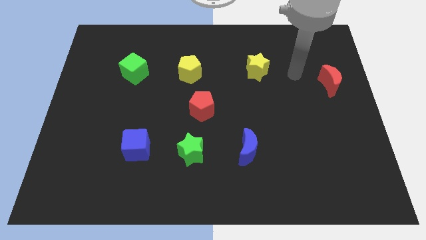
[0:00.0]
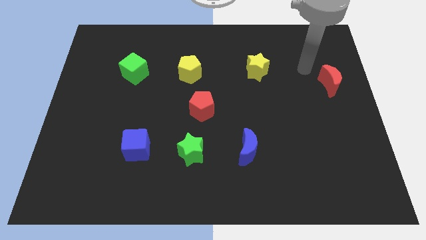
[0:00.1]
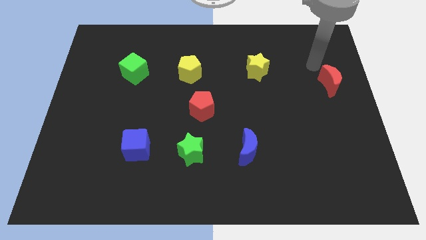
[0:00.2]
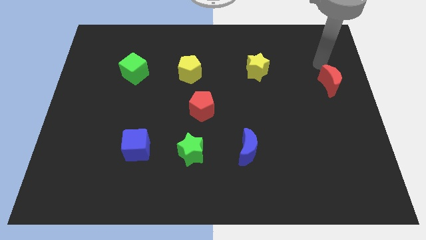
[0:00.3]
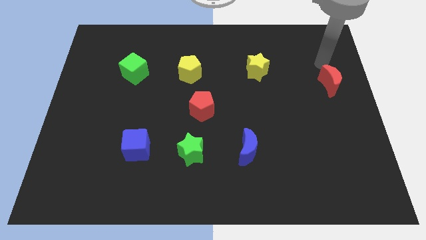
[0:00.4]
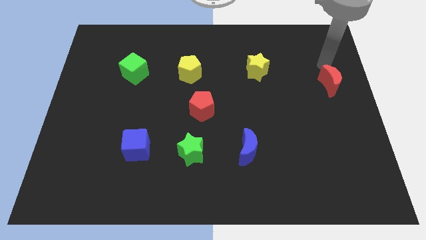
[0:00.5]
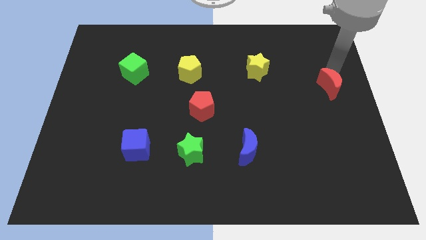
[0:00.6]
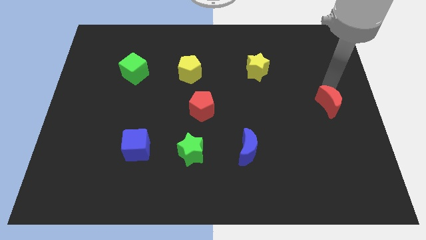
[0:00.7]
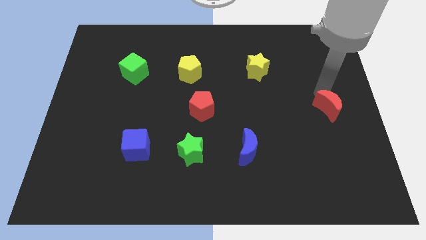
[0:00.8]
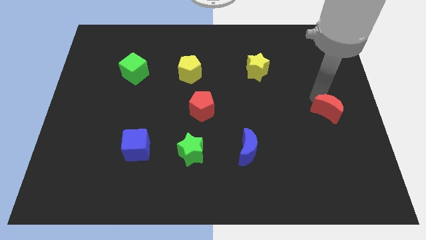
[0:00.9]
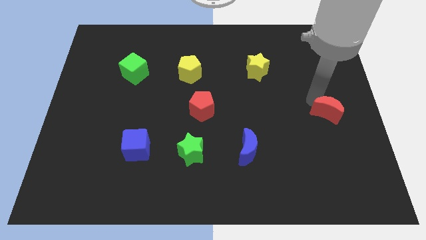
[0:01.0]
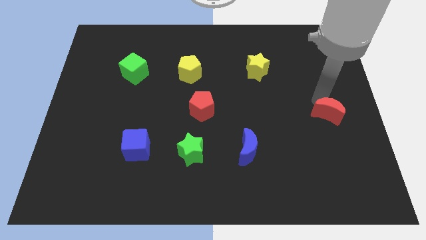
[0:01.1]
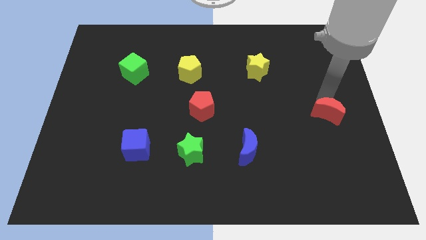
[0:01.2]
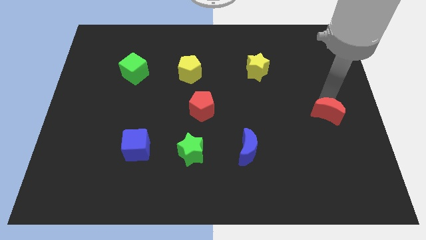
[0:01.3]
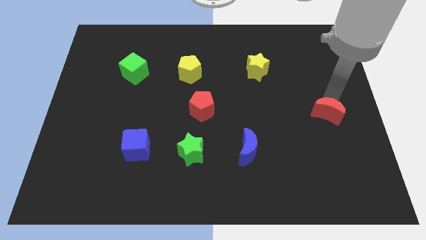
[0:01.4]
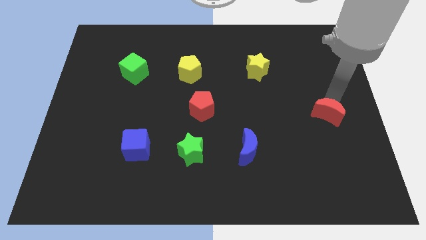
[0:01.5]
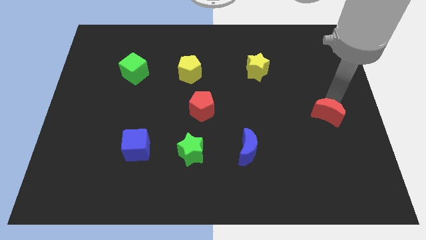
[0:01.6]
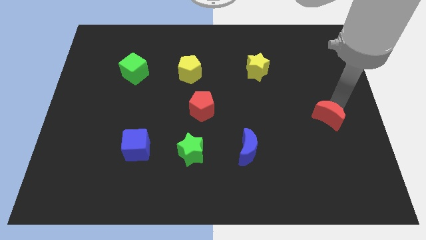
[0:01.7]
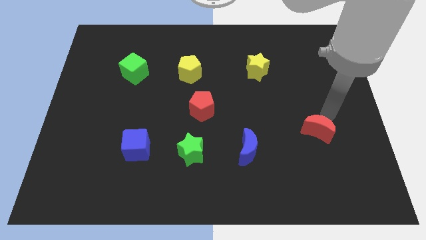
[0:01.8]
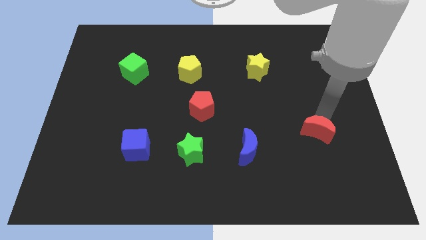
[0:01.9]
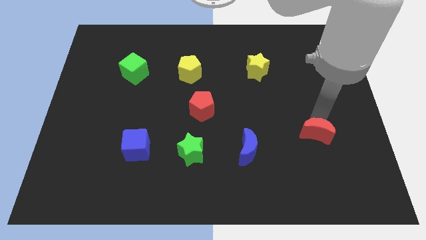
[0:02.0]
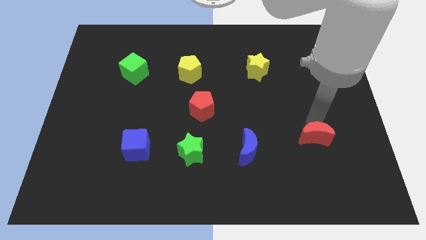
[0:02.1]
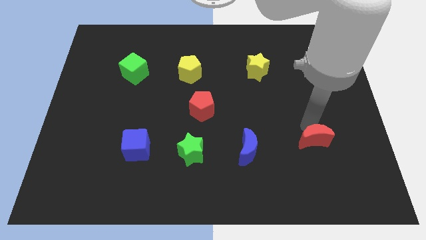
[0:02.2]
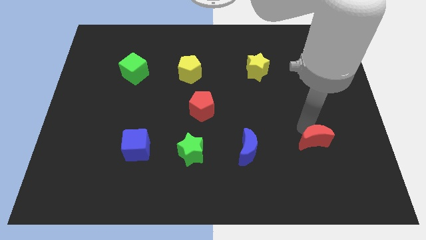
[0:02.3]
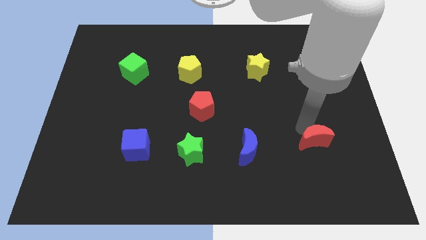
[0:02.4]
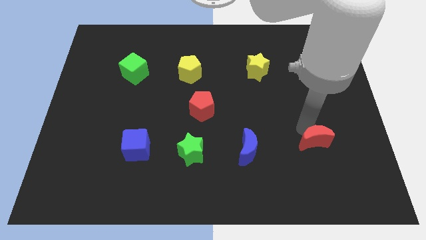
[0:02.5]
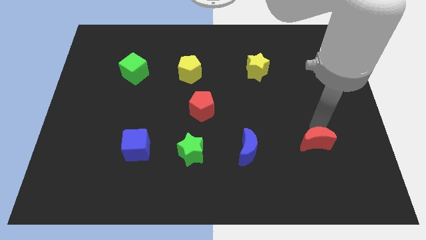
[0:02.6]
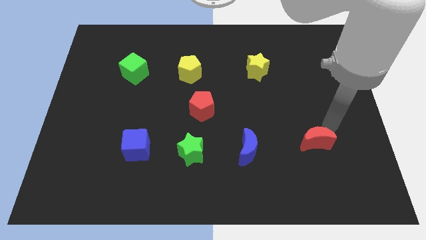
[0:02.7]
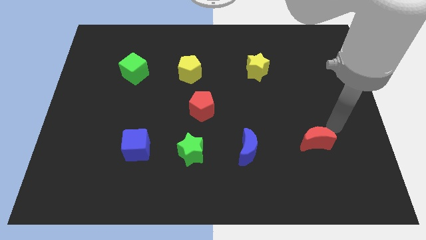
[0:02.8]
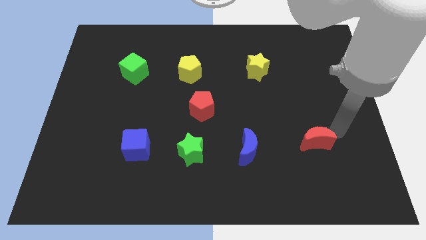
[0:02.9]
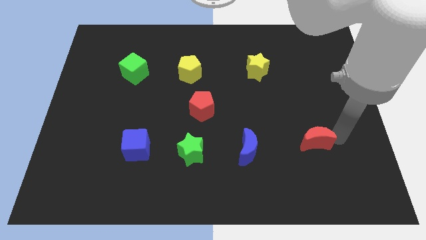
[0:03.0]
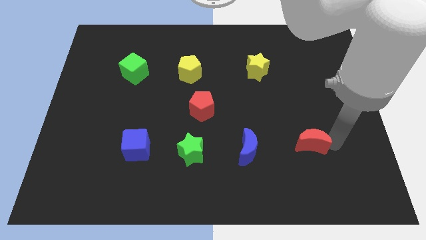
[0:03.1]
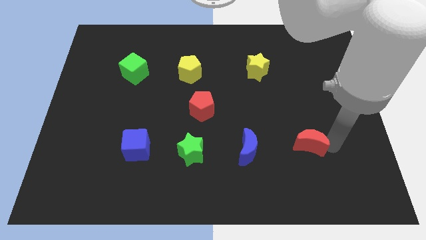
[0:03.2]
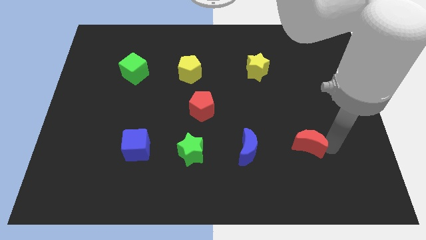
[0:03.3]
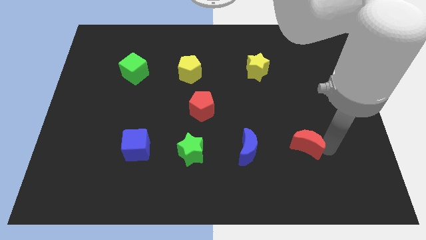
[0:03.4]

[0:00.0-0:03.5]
push the red crescent close to the right side of the blue crescent

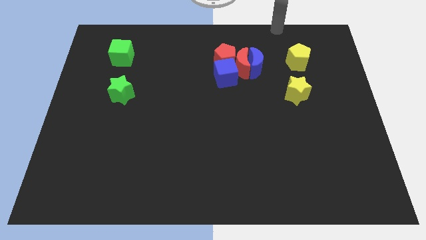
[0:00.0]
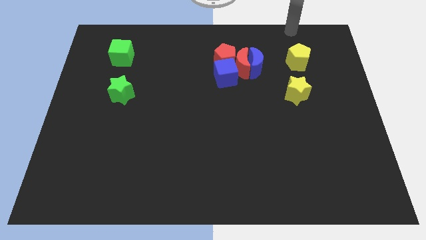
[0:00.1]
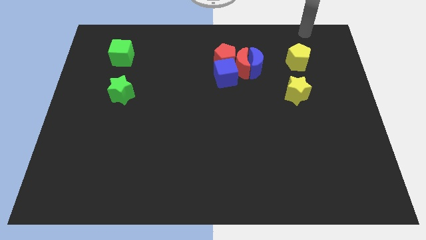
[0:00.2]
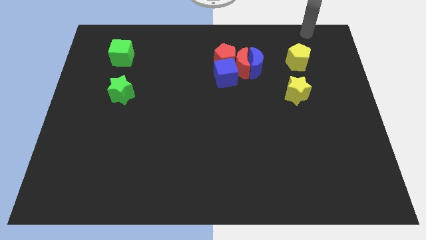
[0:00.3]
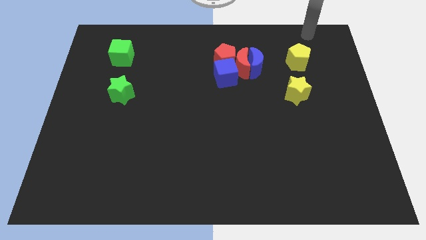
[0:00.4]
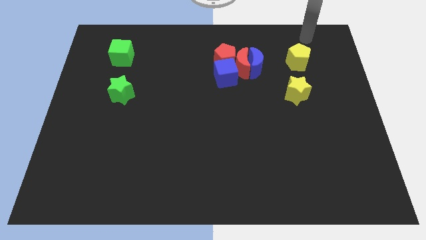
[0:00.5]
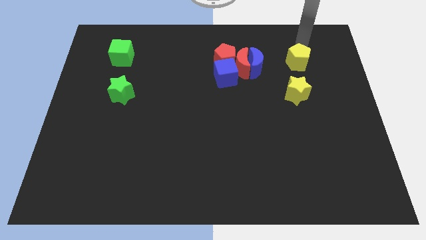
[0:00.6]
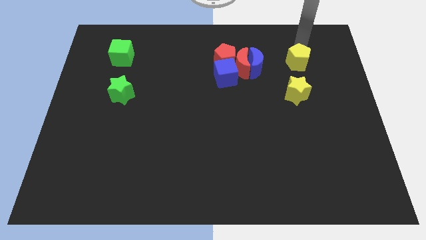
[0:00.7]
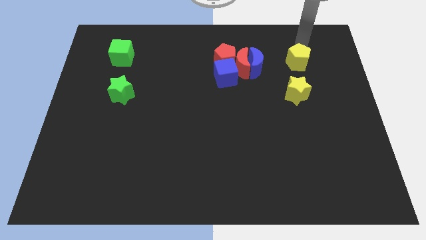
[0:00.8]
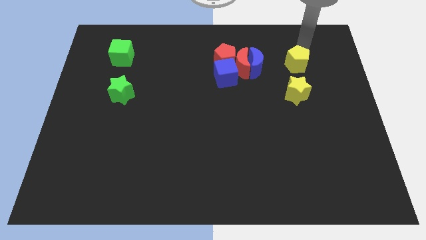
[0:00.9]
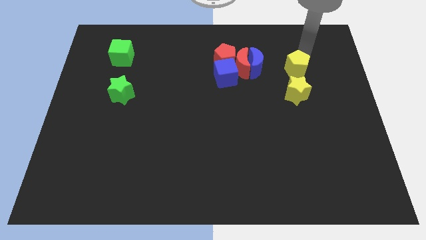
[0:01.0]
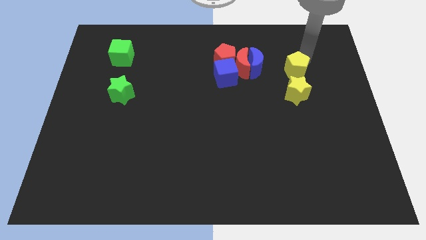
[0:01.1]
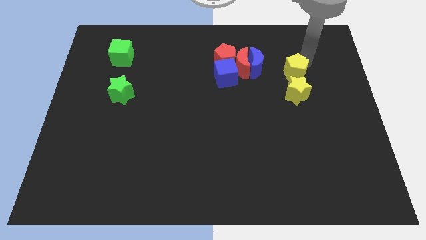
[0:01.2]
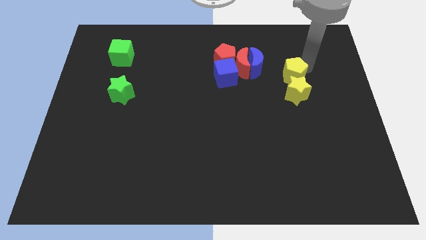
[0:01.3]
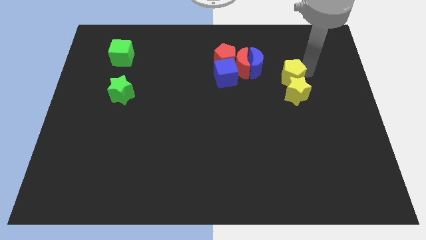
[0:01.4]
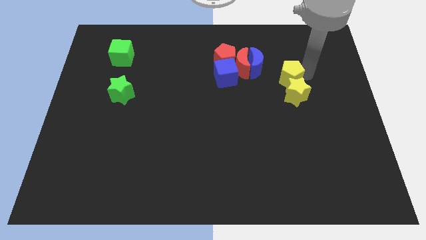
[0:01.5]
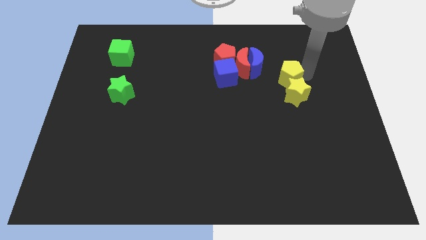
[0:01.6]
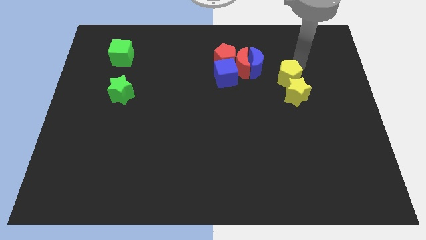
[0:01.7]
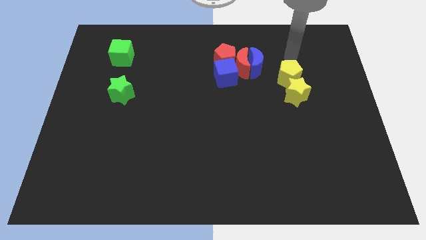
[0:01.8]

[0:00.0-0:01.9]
move the yellow pentagon above of the yellow star

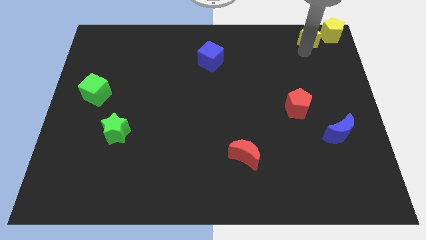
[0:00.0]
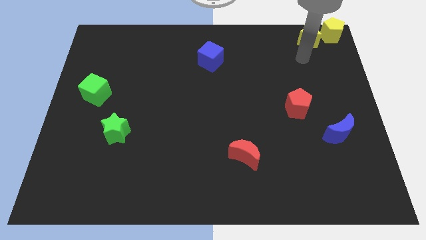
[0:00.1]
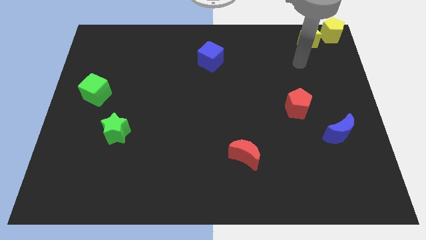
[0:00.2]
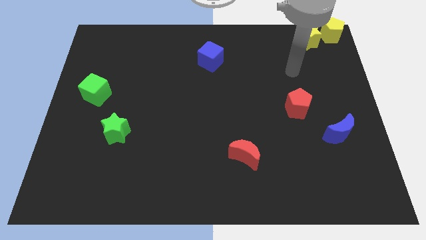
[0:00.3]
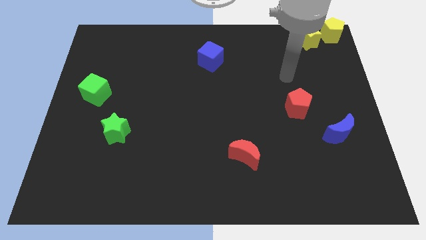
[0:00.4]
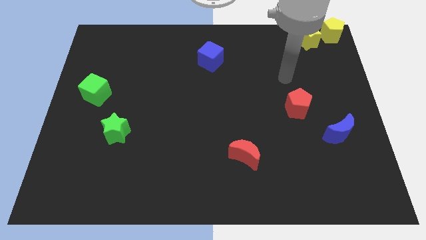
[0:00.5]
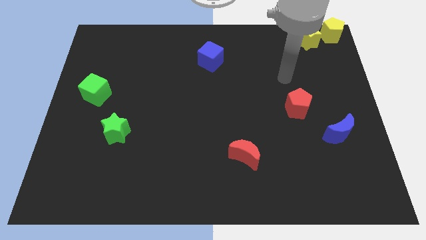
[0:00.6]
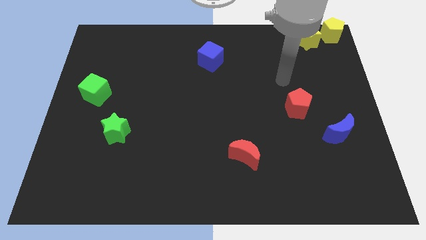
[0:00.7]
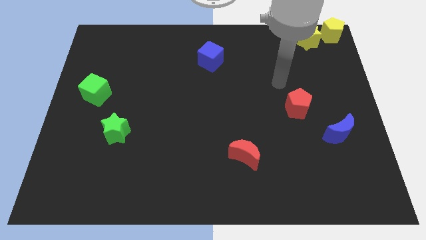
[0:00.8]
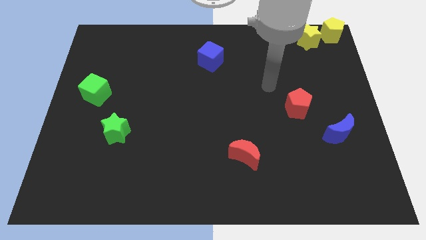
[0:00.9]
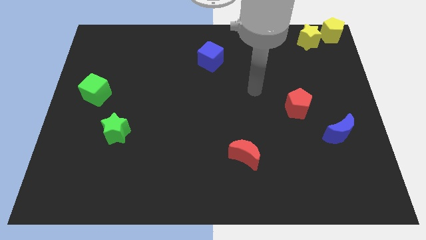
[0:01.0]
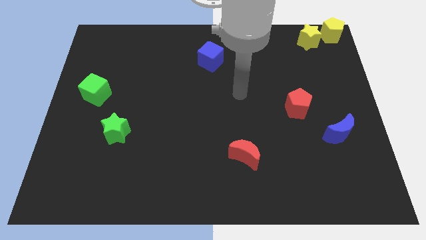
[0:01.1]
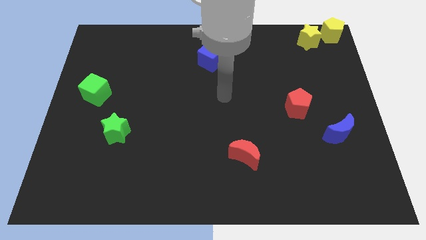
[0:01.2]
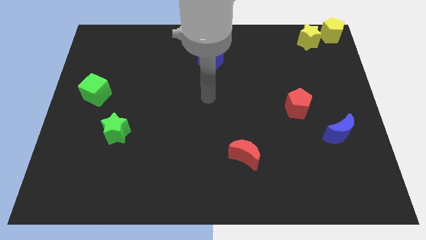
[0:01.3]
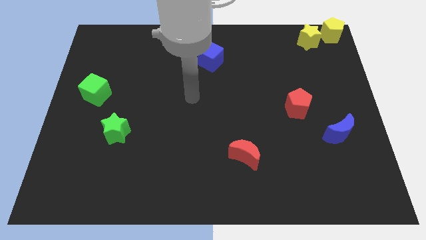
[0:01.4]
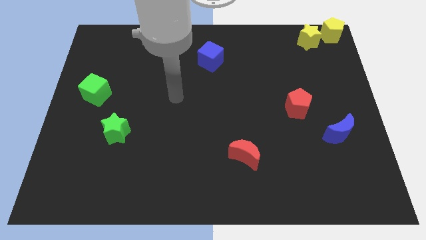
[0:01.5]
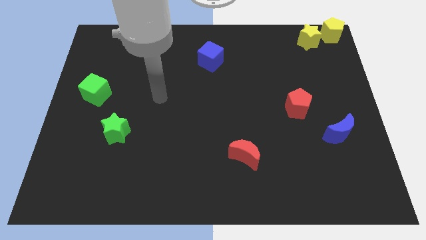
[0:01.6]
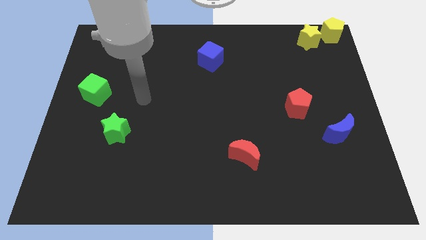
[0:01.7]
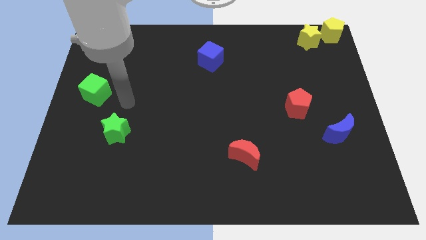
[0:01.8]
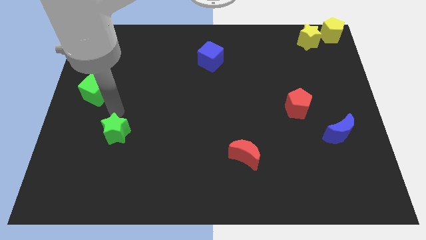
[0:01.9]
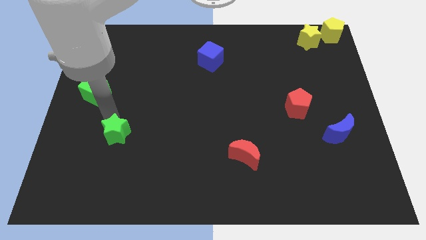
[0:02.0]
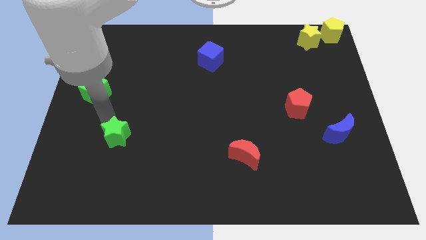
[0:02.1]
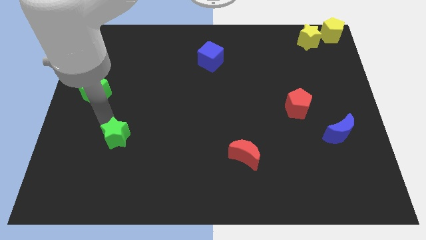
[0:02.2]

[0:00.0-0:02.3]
move your arm towards the top of green star

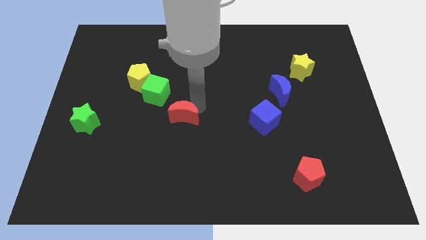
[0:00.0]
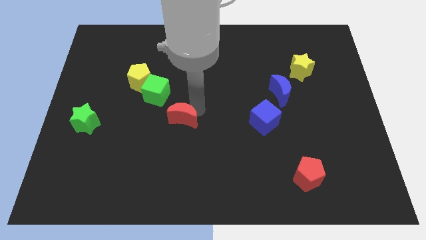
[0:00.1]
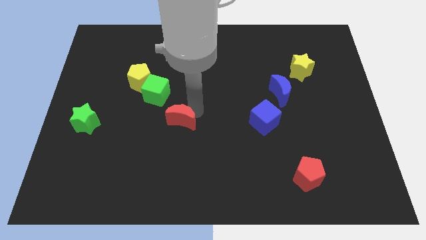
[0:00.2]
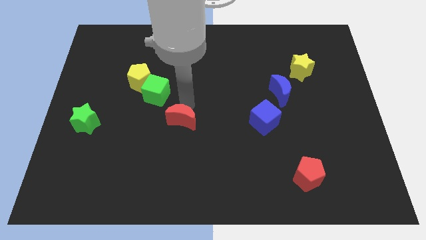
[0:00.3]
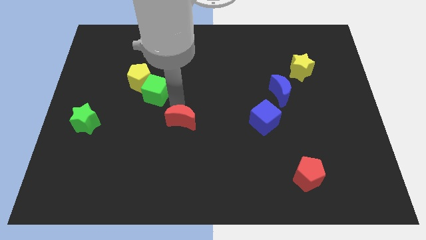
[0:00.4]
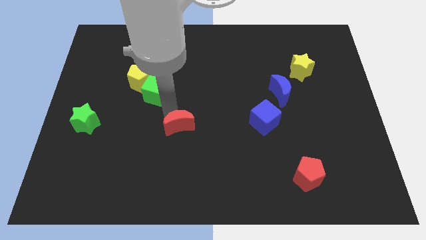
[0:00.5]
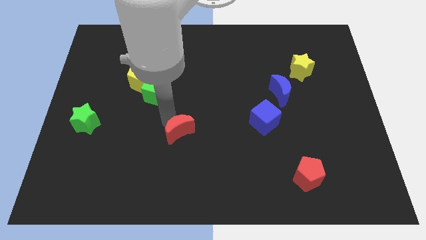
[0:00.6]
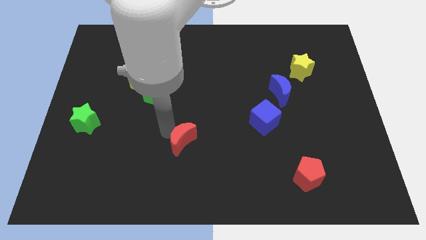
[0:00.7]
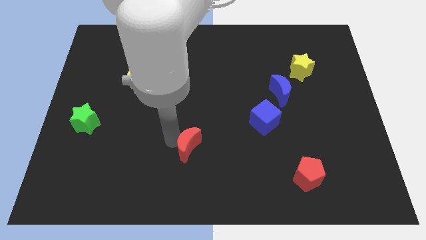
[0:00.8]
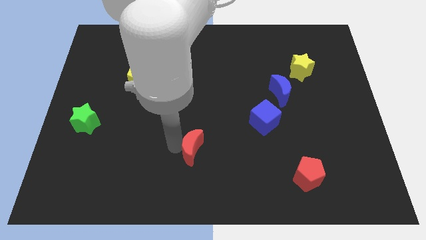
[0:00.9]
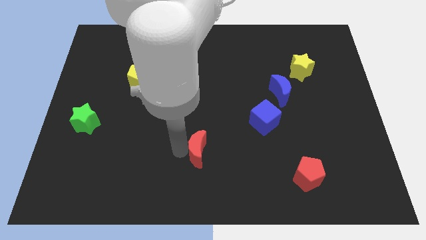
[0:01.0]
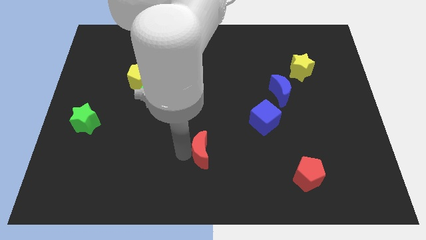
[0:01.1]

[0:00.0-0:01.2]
move red moon towards its bottom
